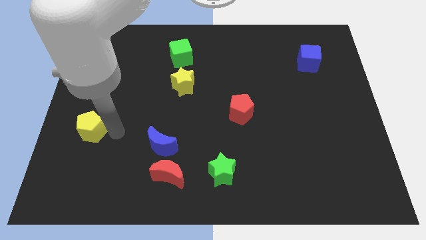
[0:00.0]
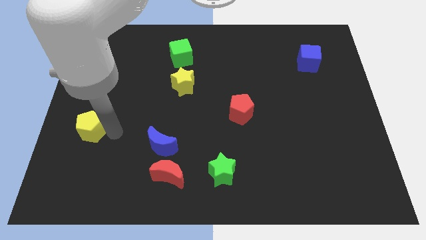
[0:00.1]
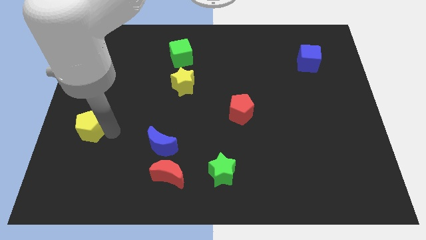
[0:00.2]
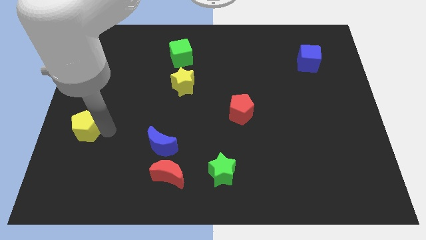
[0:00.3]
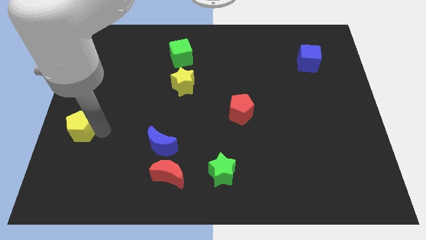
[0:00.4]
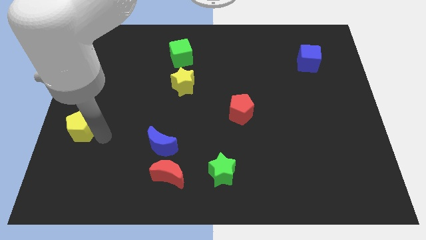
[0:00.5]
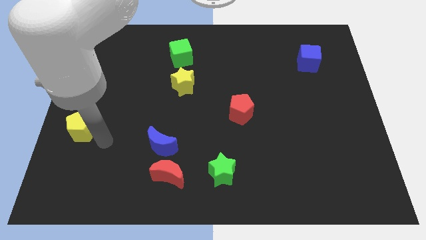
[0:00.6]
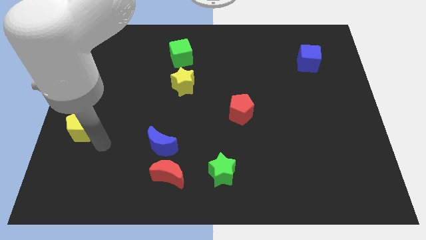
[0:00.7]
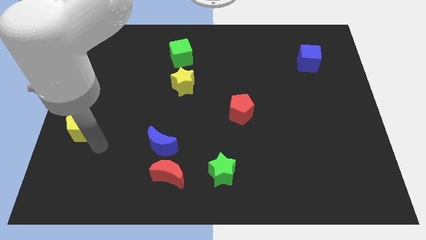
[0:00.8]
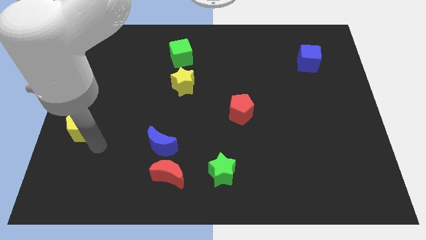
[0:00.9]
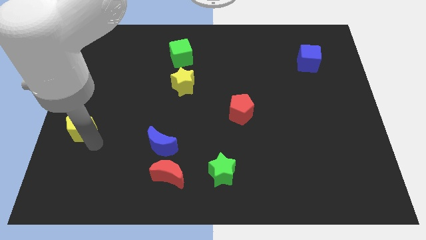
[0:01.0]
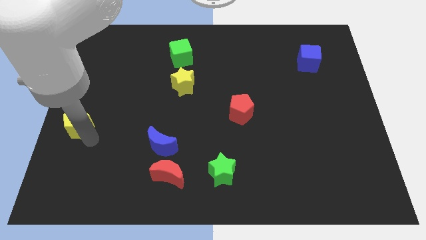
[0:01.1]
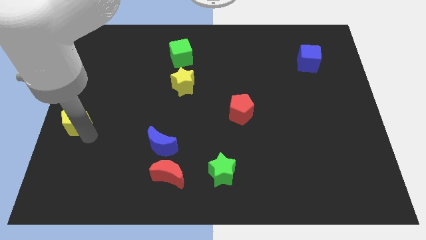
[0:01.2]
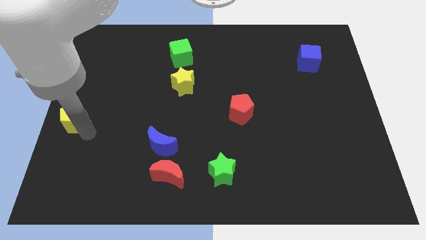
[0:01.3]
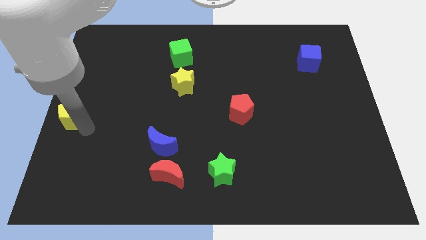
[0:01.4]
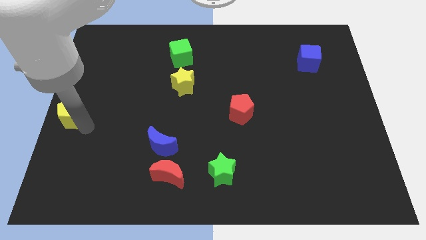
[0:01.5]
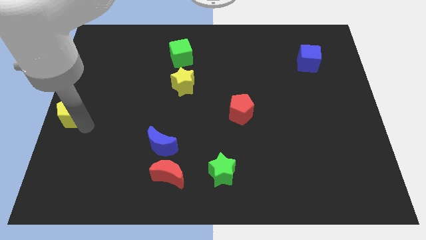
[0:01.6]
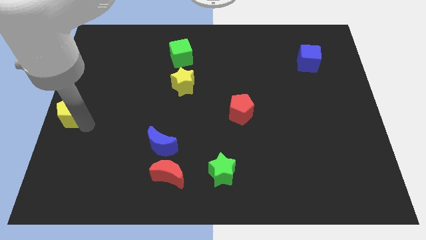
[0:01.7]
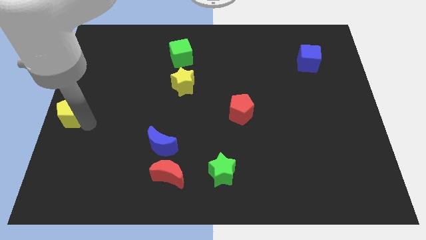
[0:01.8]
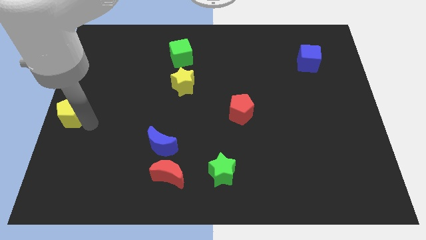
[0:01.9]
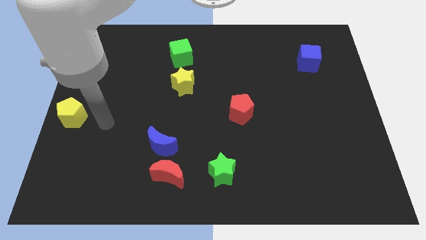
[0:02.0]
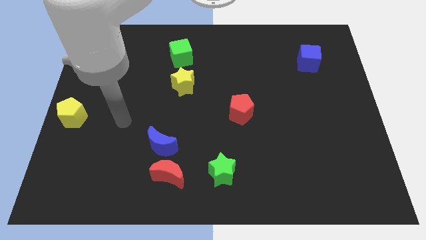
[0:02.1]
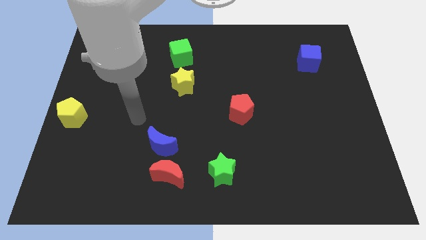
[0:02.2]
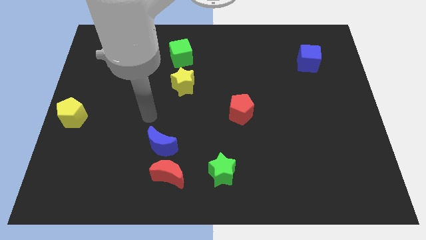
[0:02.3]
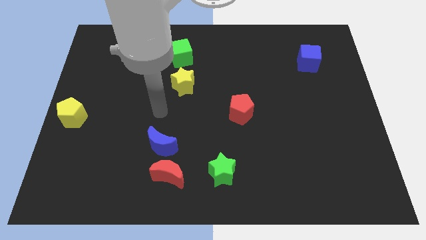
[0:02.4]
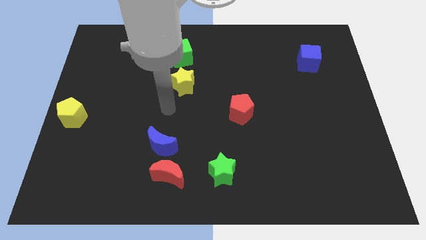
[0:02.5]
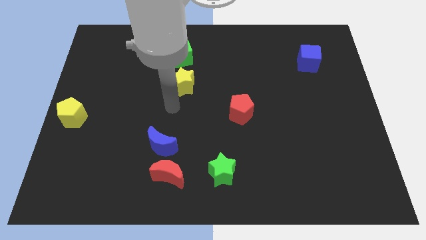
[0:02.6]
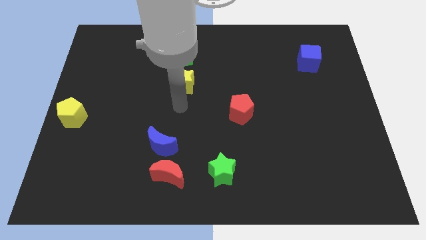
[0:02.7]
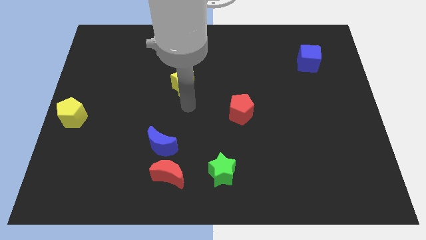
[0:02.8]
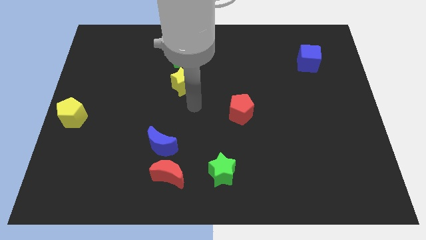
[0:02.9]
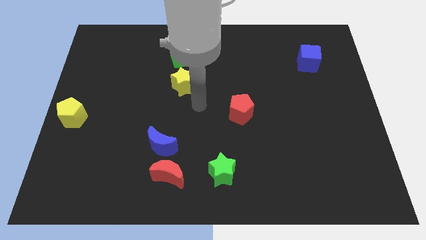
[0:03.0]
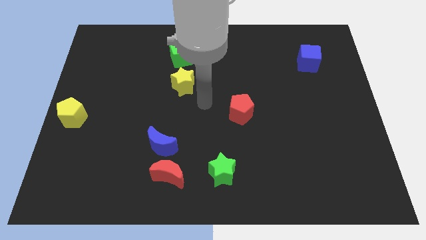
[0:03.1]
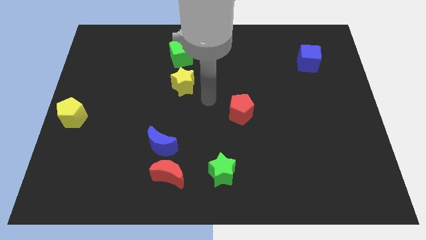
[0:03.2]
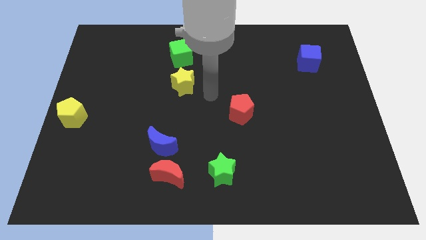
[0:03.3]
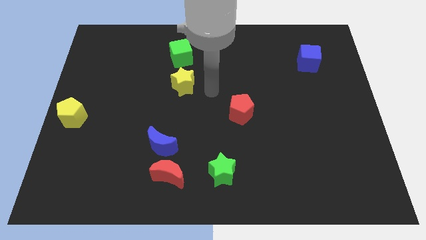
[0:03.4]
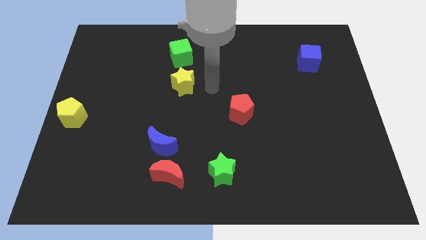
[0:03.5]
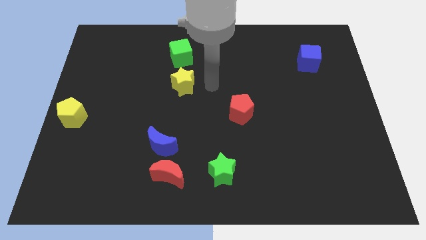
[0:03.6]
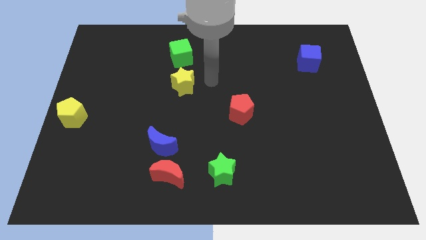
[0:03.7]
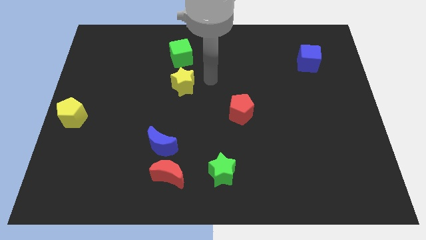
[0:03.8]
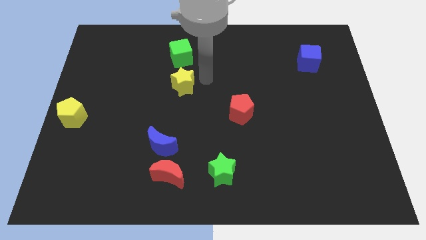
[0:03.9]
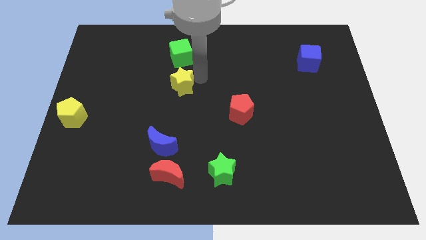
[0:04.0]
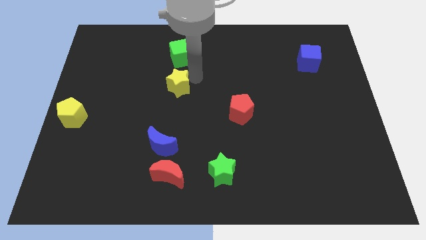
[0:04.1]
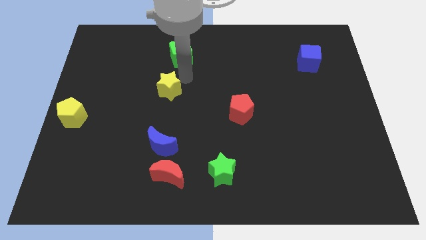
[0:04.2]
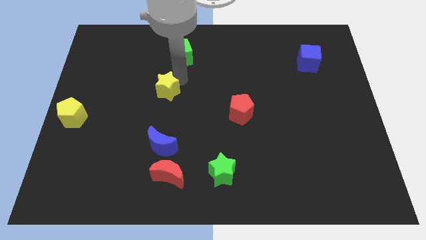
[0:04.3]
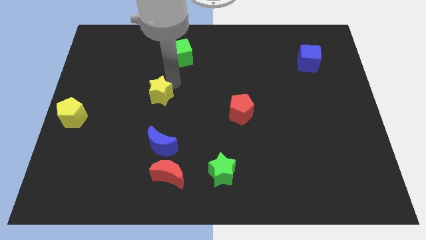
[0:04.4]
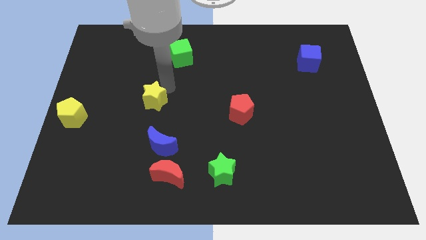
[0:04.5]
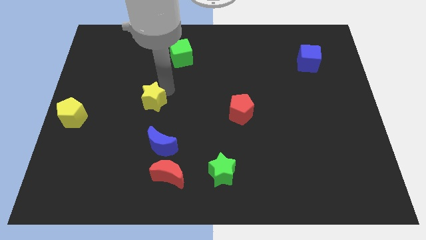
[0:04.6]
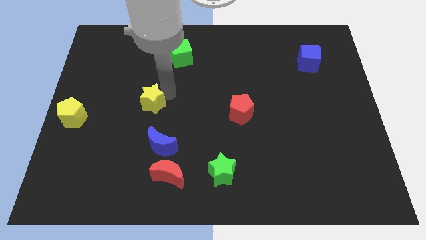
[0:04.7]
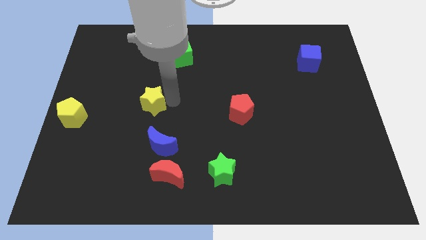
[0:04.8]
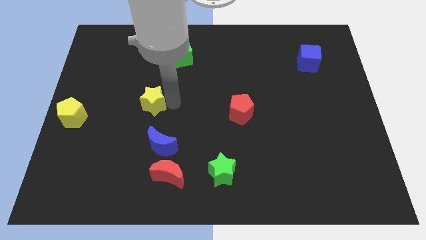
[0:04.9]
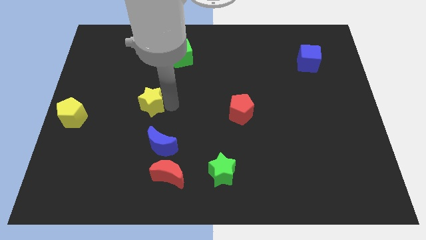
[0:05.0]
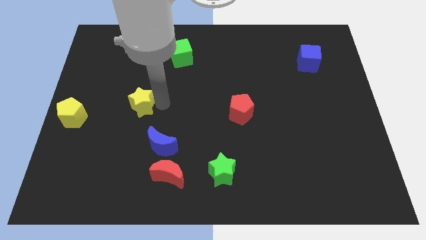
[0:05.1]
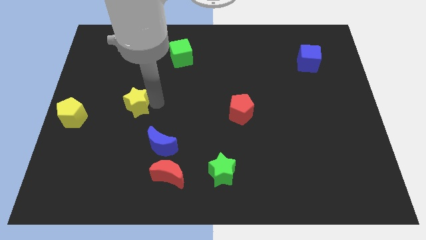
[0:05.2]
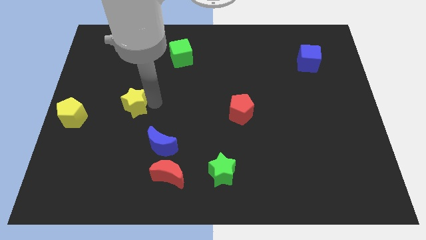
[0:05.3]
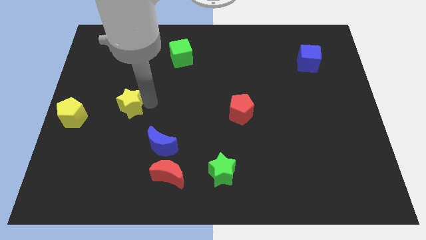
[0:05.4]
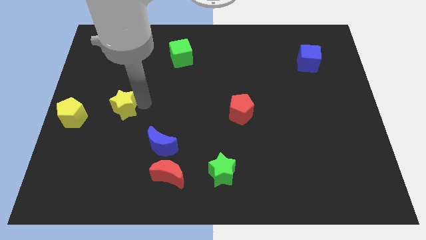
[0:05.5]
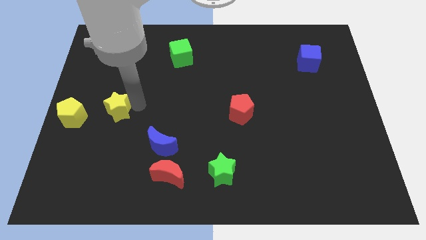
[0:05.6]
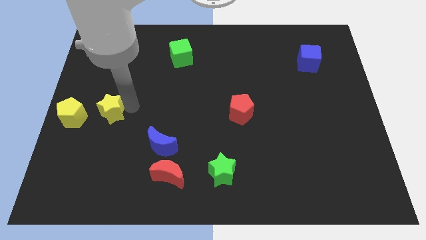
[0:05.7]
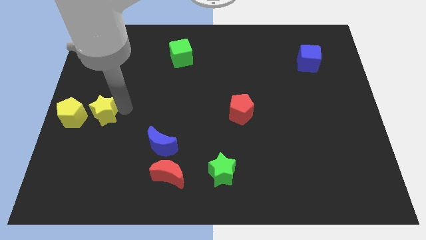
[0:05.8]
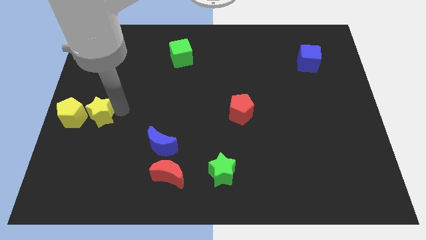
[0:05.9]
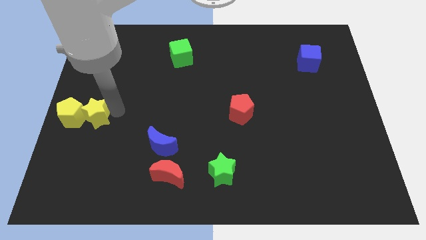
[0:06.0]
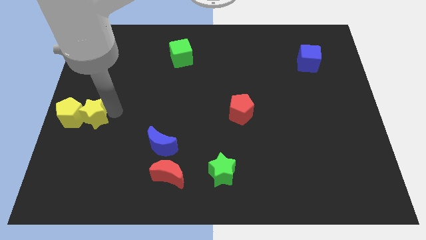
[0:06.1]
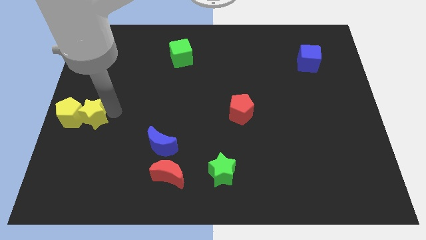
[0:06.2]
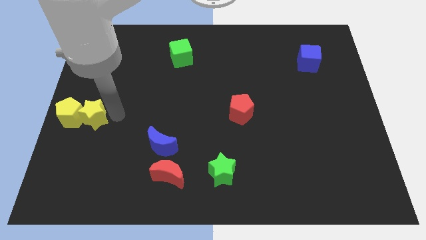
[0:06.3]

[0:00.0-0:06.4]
push the yellow star into the yellow pentagon

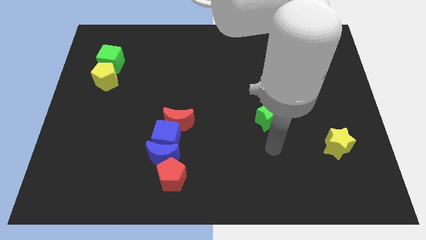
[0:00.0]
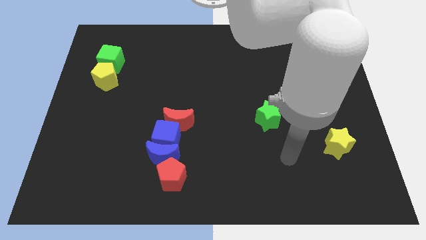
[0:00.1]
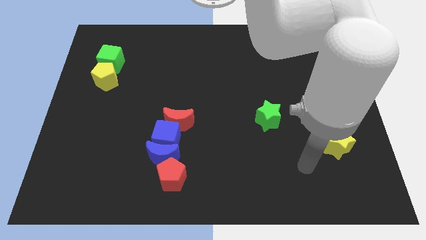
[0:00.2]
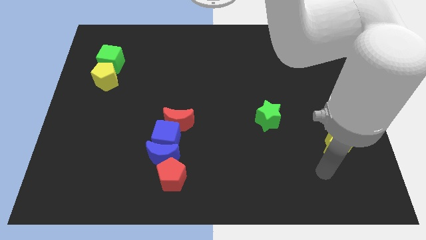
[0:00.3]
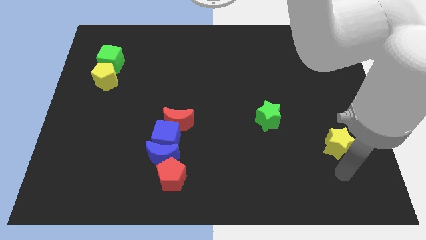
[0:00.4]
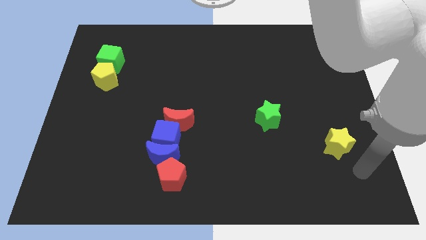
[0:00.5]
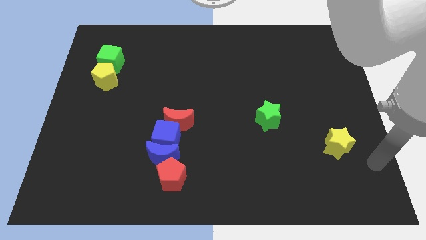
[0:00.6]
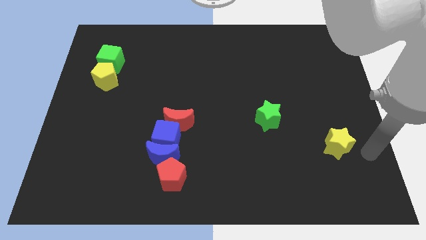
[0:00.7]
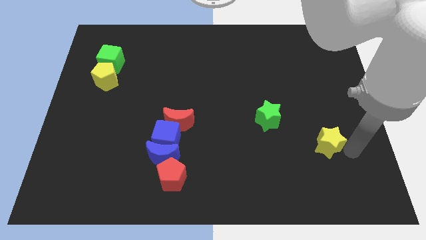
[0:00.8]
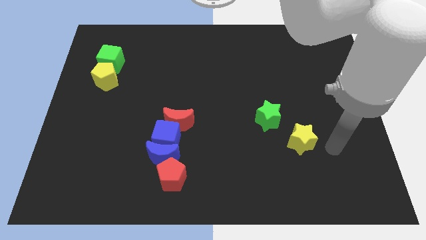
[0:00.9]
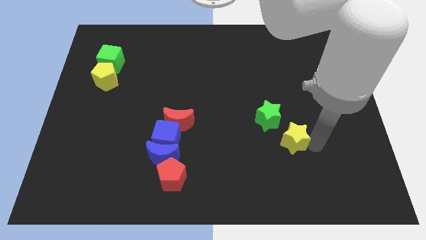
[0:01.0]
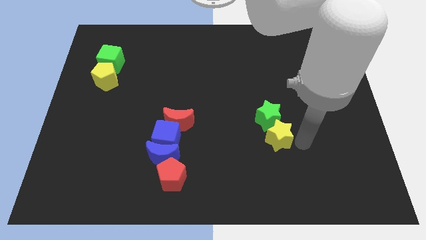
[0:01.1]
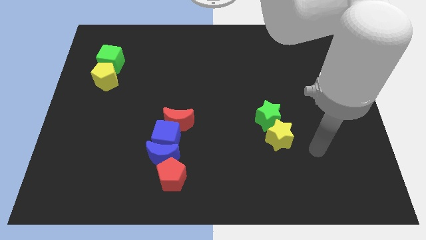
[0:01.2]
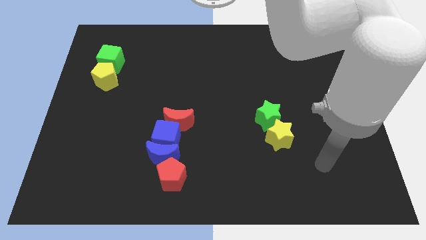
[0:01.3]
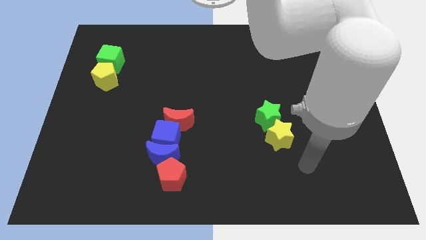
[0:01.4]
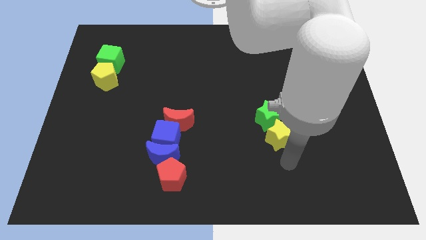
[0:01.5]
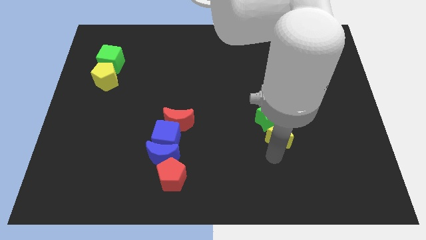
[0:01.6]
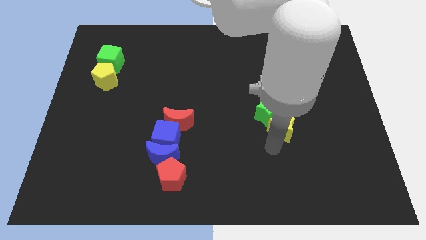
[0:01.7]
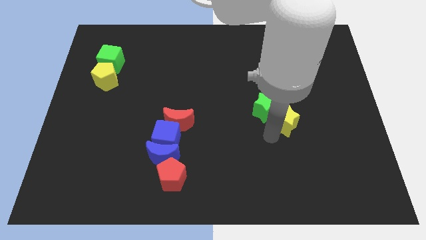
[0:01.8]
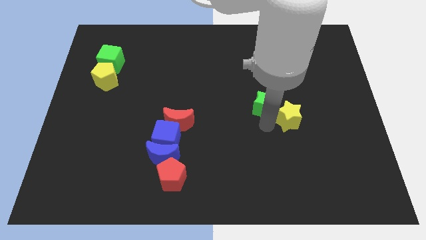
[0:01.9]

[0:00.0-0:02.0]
push the yellow star into green star

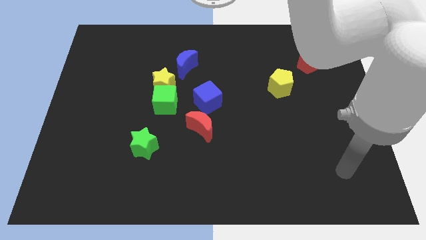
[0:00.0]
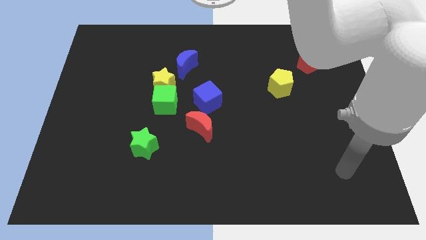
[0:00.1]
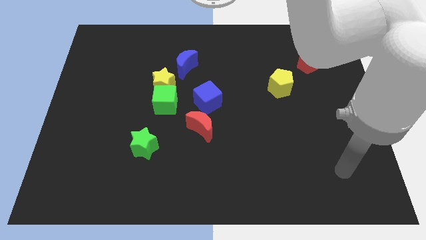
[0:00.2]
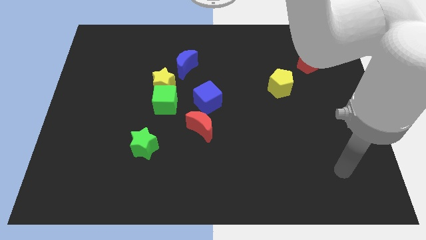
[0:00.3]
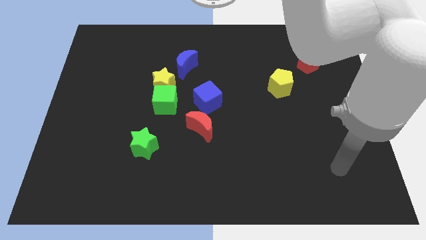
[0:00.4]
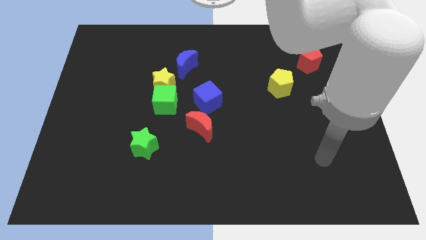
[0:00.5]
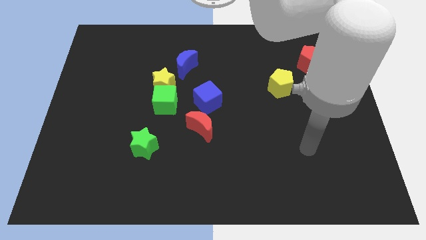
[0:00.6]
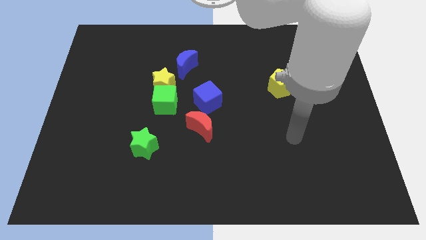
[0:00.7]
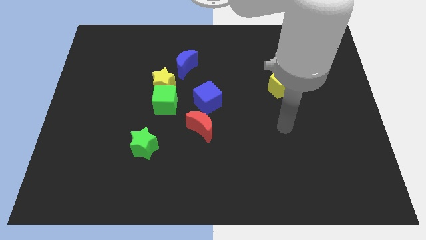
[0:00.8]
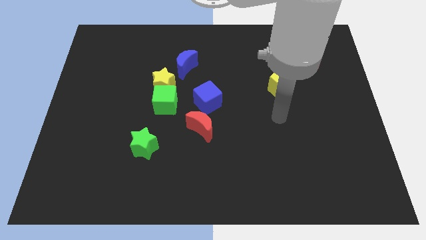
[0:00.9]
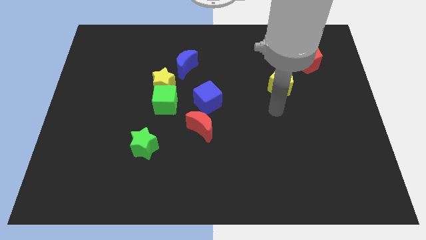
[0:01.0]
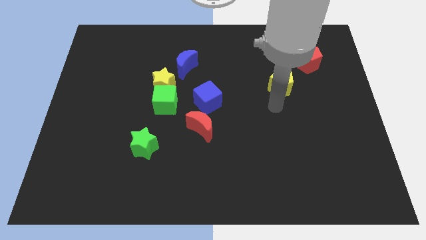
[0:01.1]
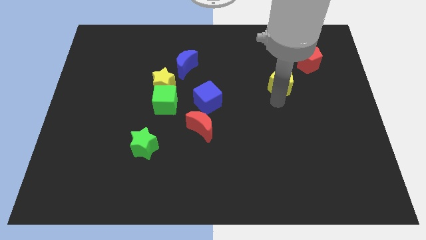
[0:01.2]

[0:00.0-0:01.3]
point your arm to the bottom side of the yellow pentagon
